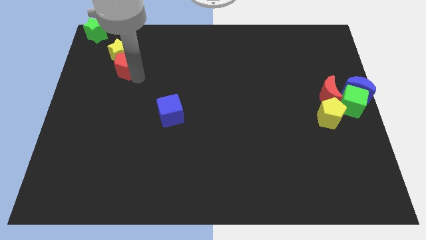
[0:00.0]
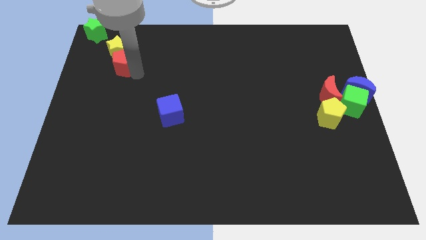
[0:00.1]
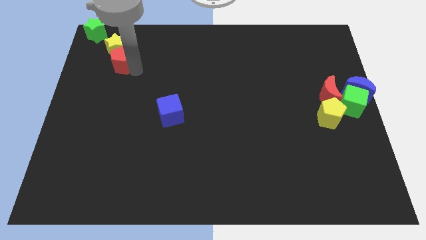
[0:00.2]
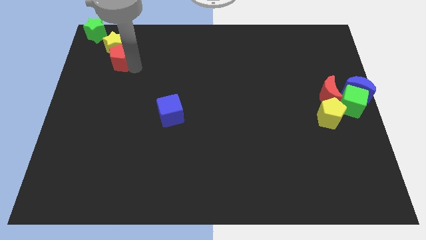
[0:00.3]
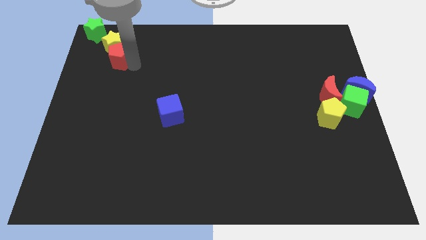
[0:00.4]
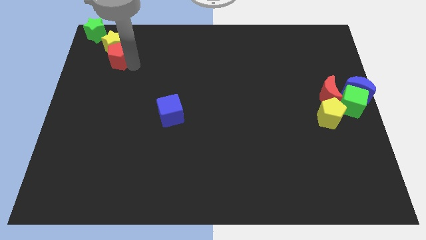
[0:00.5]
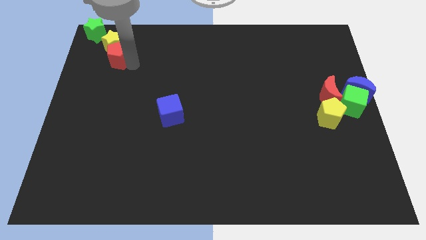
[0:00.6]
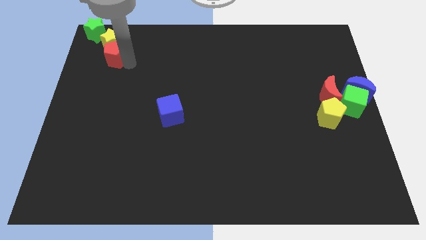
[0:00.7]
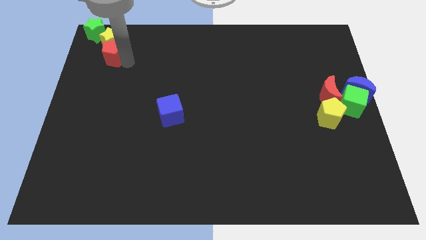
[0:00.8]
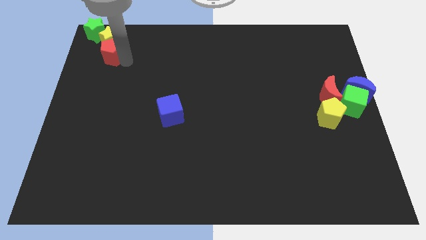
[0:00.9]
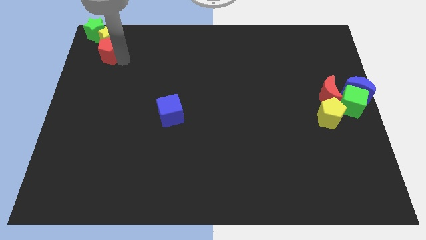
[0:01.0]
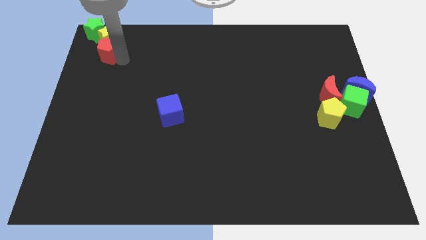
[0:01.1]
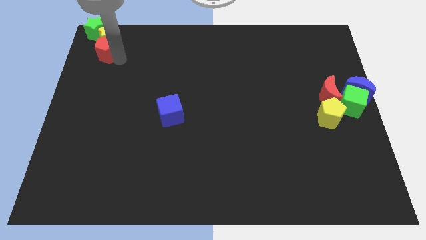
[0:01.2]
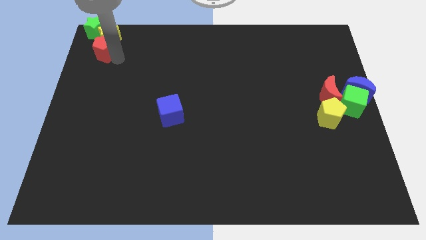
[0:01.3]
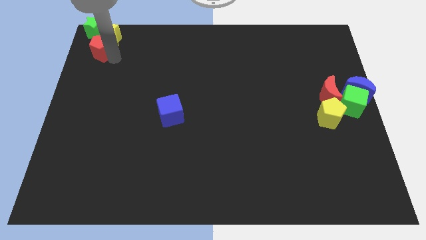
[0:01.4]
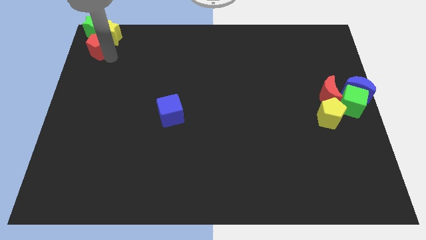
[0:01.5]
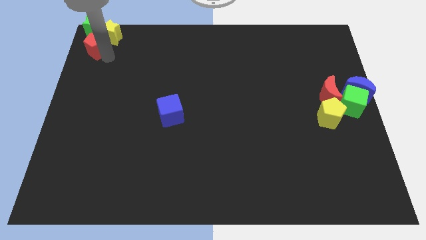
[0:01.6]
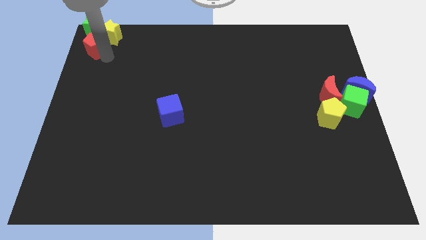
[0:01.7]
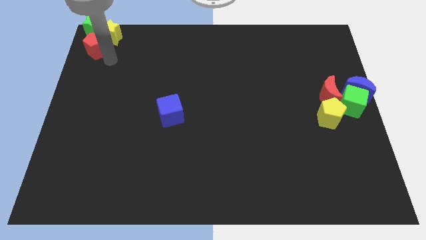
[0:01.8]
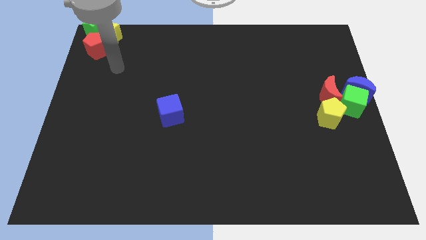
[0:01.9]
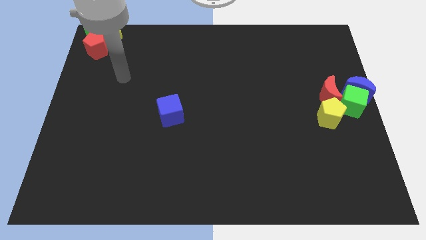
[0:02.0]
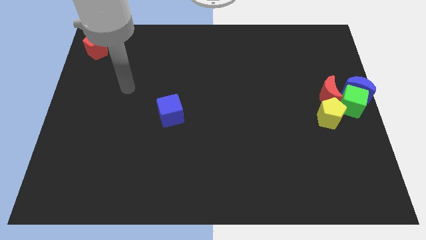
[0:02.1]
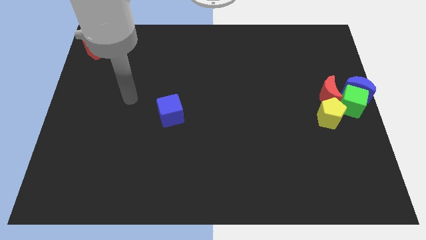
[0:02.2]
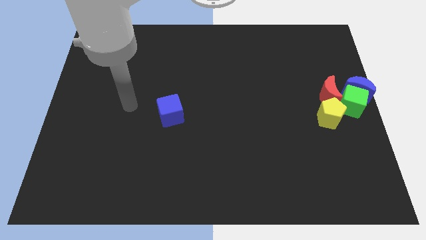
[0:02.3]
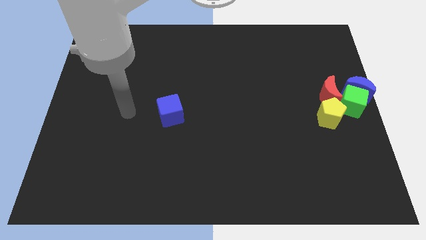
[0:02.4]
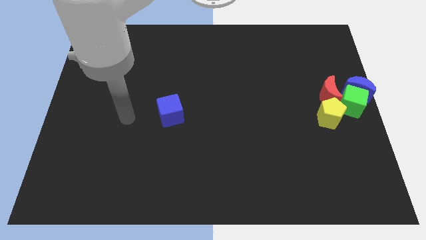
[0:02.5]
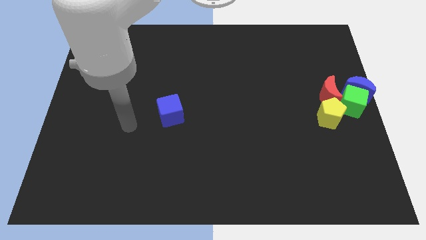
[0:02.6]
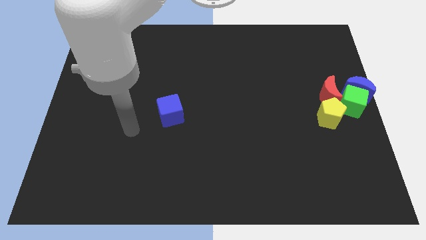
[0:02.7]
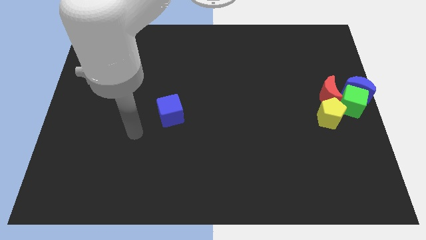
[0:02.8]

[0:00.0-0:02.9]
push the red pentagon to the bottom of the green star

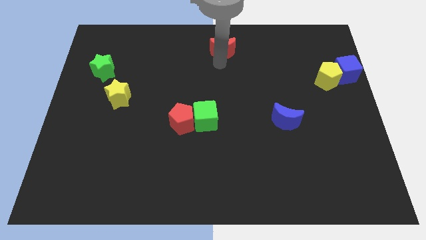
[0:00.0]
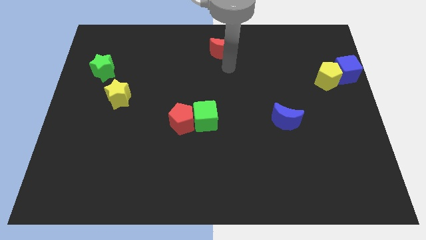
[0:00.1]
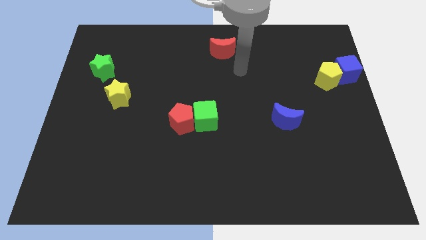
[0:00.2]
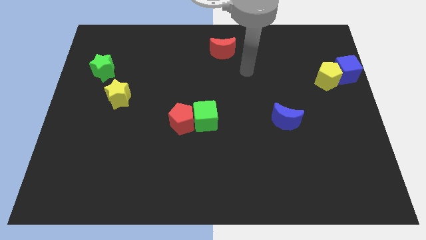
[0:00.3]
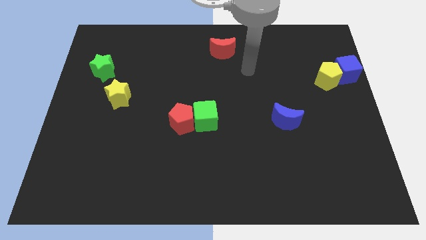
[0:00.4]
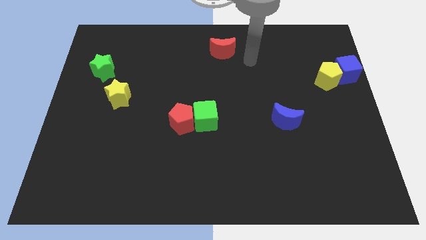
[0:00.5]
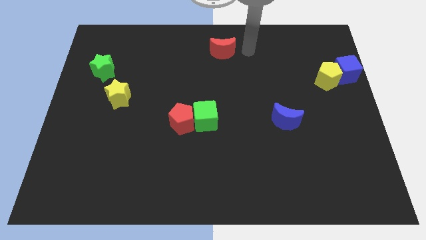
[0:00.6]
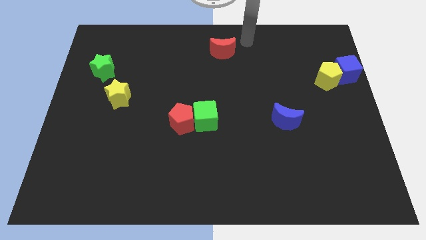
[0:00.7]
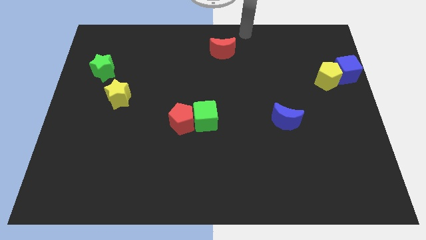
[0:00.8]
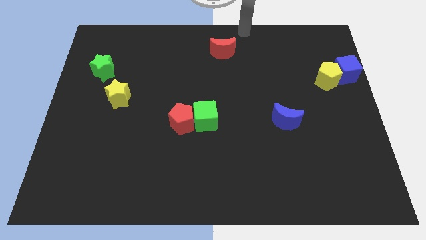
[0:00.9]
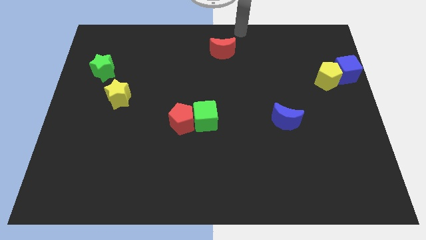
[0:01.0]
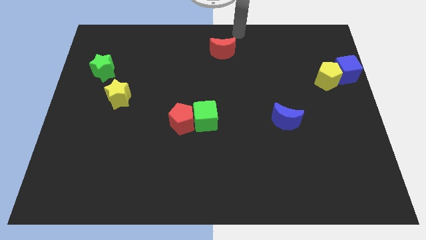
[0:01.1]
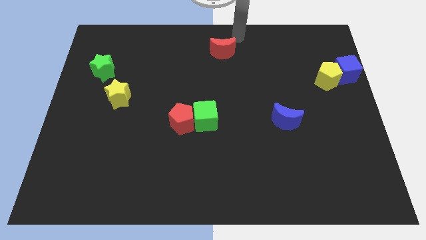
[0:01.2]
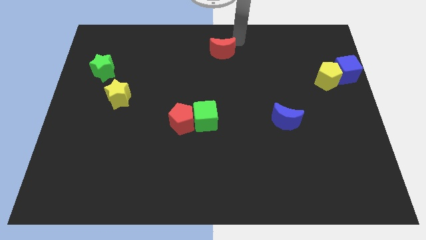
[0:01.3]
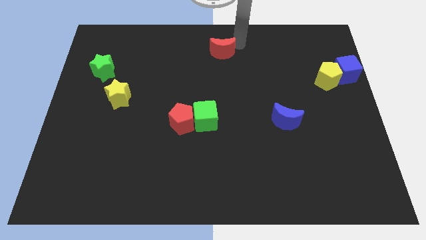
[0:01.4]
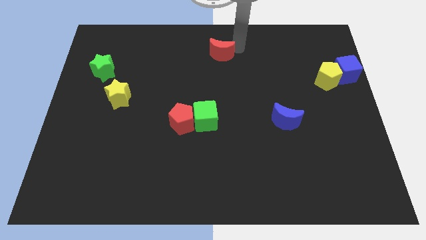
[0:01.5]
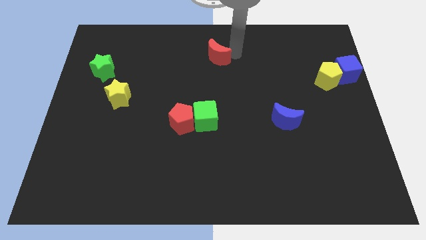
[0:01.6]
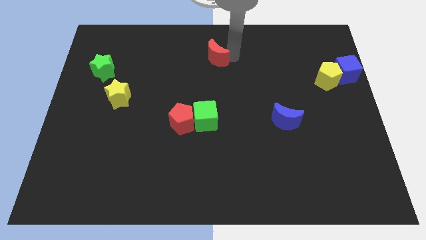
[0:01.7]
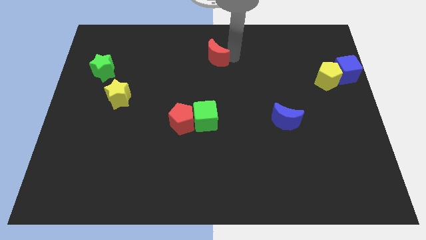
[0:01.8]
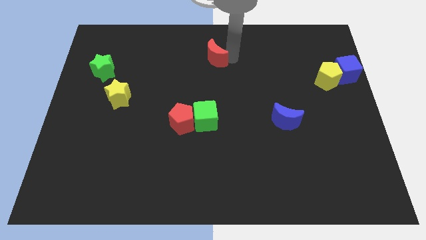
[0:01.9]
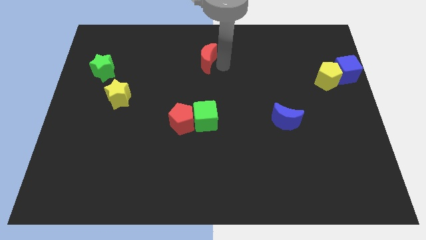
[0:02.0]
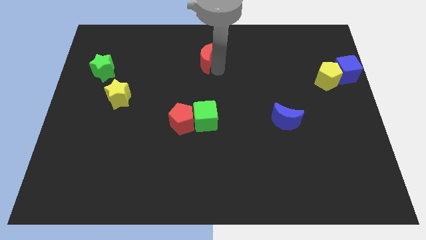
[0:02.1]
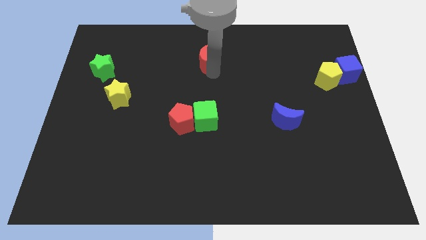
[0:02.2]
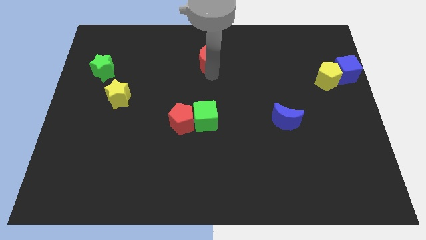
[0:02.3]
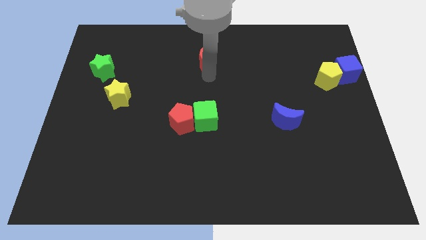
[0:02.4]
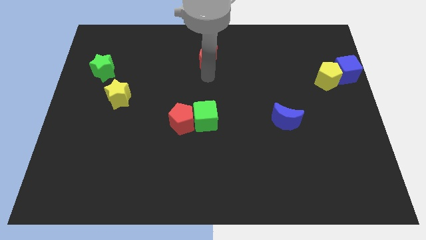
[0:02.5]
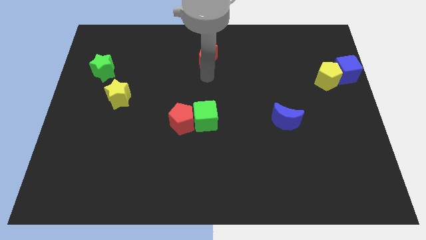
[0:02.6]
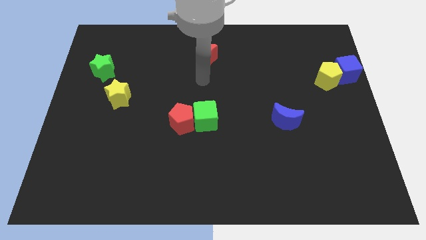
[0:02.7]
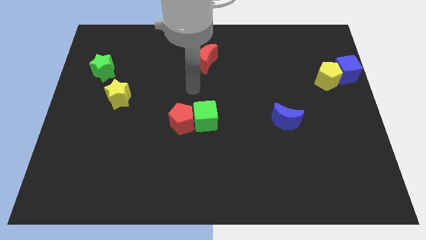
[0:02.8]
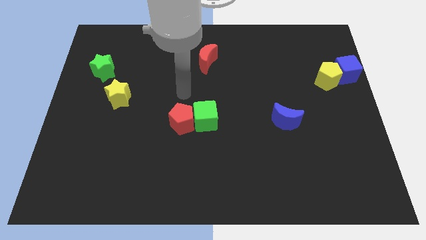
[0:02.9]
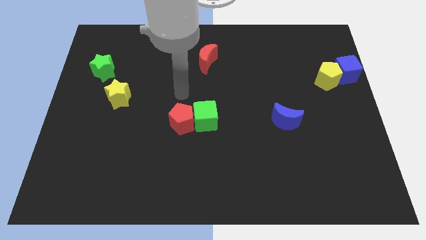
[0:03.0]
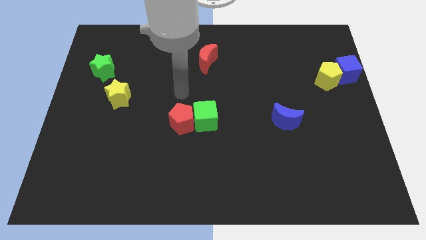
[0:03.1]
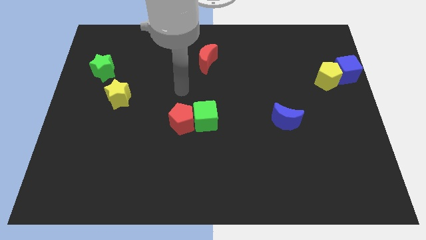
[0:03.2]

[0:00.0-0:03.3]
move the red crescent slightly to the bottom

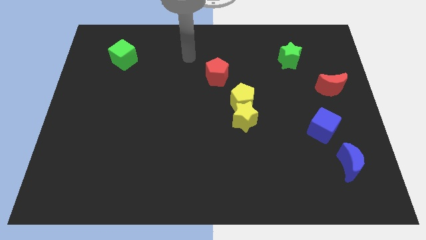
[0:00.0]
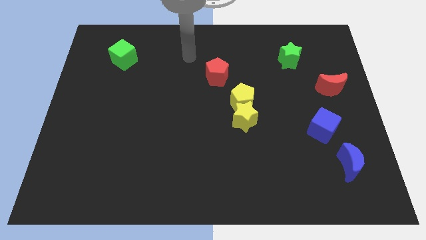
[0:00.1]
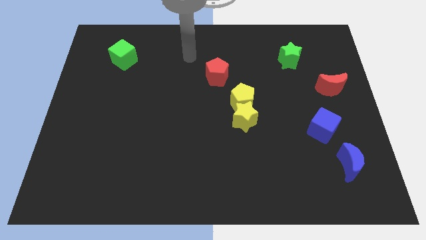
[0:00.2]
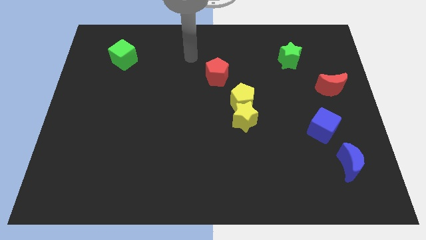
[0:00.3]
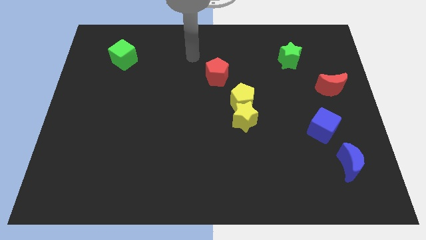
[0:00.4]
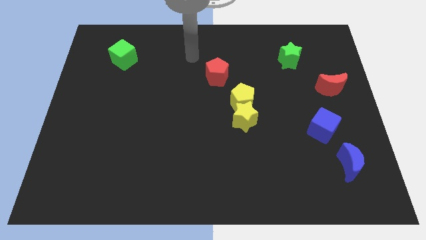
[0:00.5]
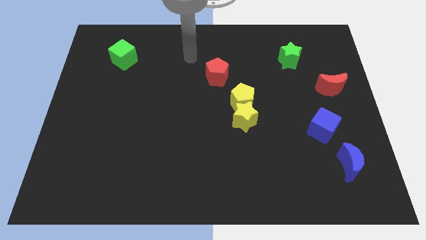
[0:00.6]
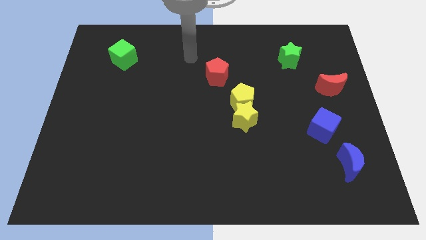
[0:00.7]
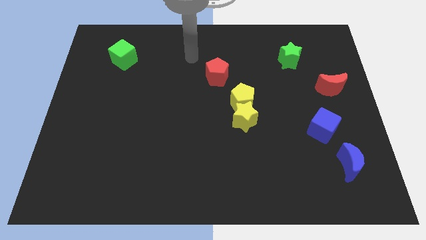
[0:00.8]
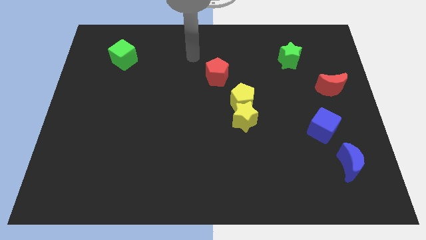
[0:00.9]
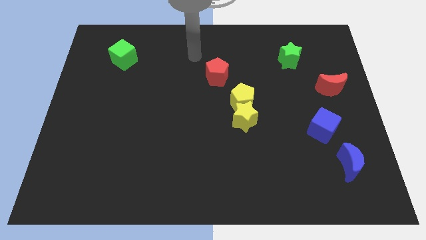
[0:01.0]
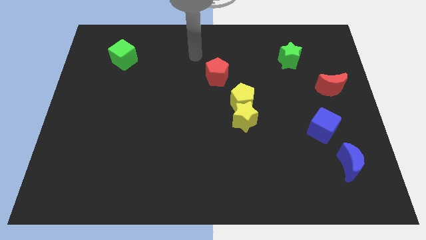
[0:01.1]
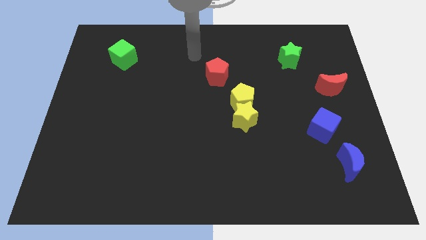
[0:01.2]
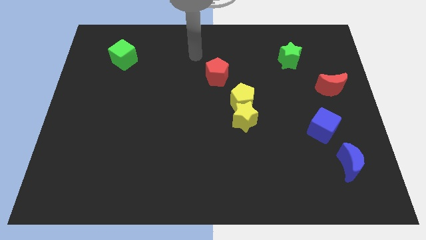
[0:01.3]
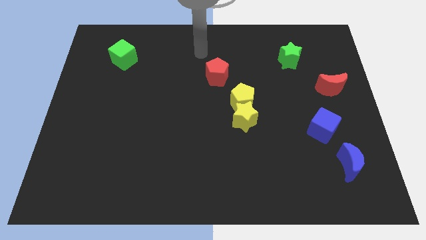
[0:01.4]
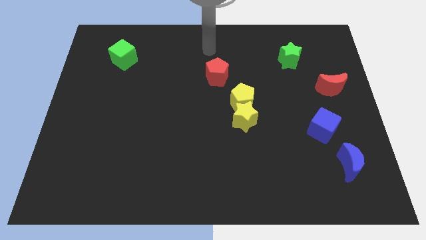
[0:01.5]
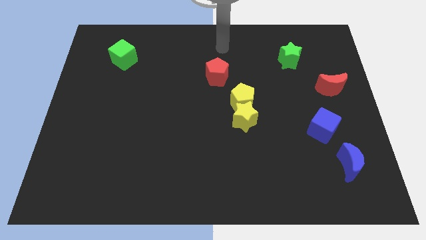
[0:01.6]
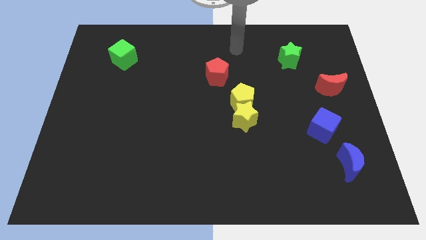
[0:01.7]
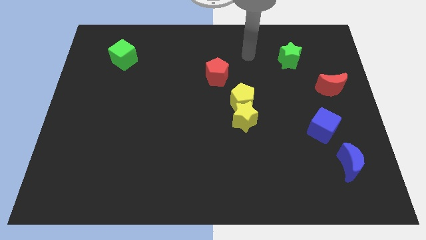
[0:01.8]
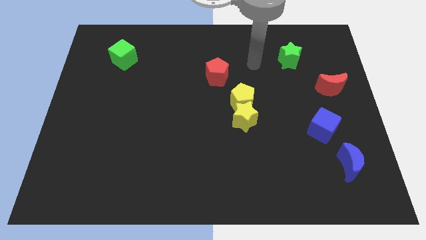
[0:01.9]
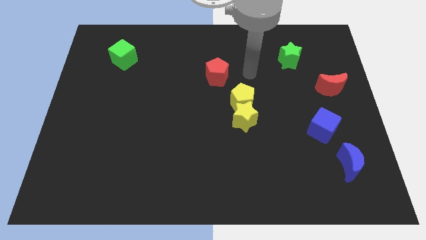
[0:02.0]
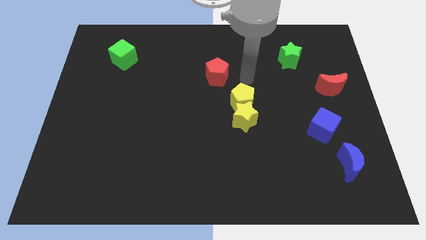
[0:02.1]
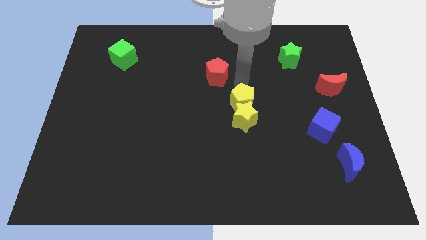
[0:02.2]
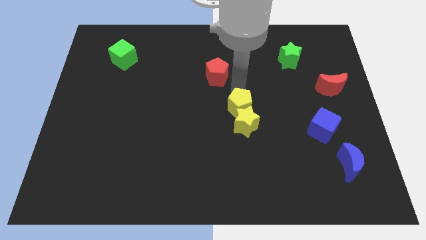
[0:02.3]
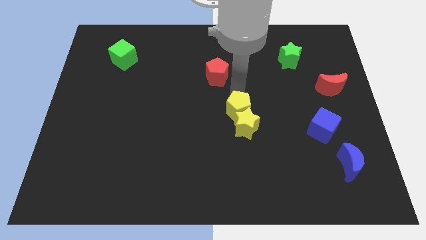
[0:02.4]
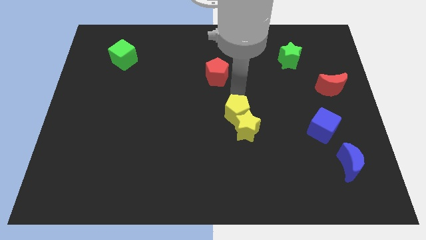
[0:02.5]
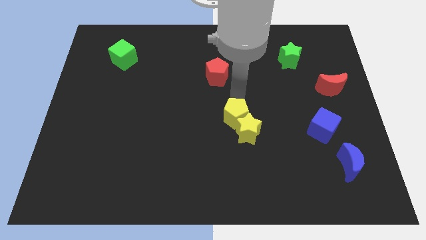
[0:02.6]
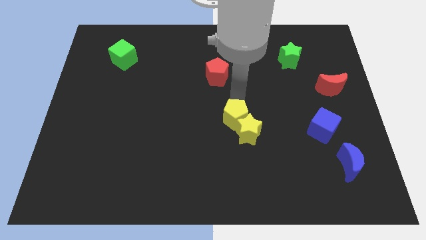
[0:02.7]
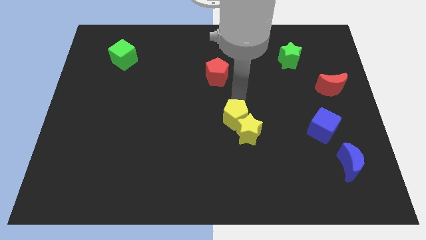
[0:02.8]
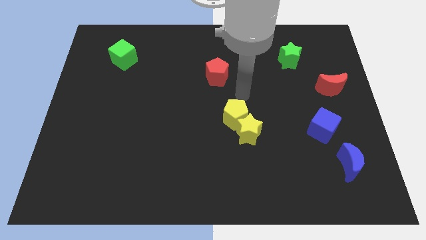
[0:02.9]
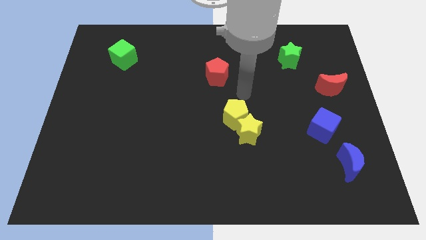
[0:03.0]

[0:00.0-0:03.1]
push the group of yellow blocks slightly downwards
